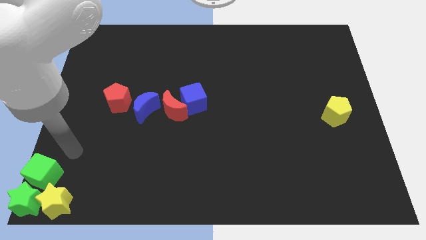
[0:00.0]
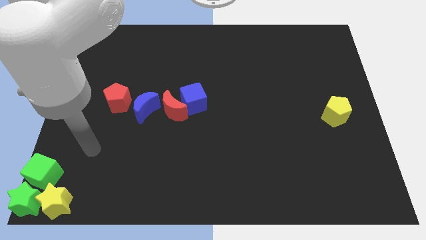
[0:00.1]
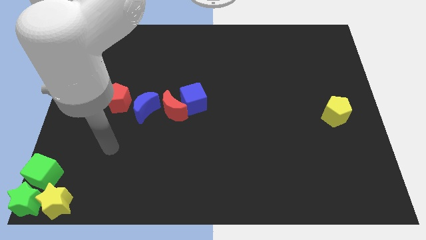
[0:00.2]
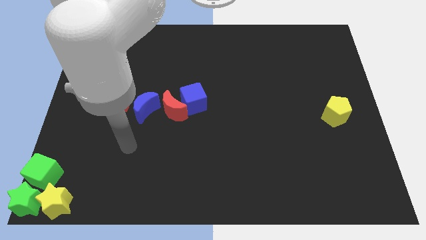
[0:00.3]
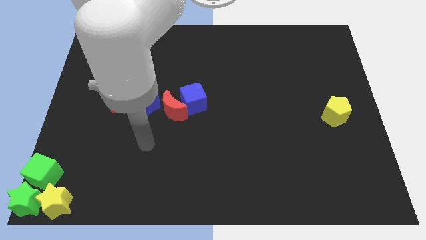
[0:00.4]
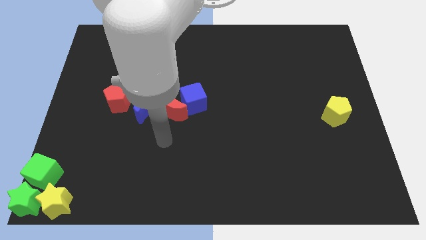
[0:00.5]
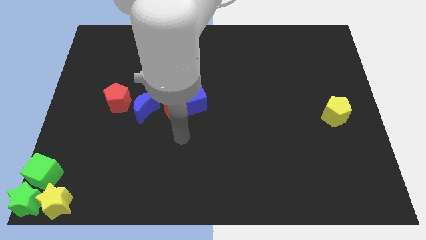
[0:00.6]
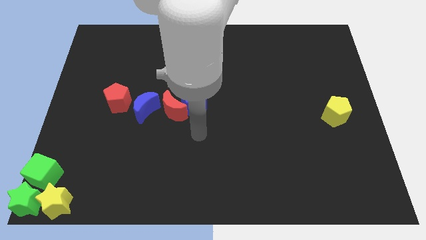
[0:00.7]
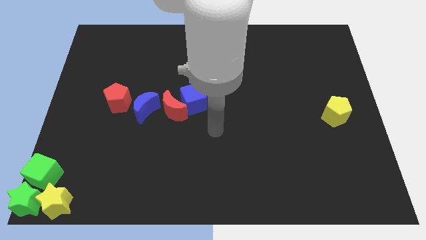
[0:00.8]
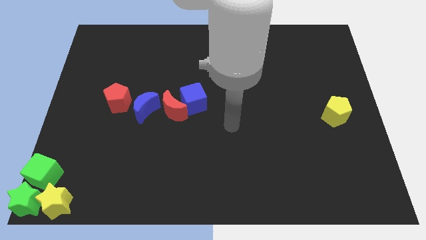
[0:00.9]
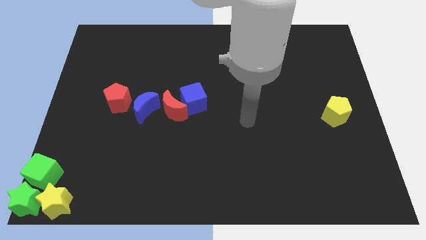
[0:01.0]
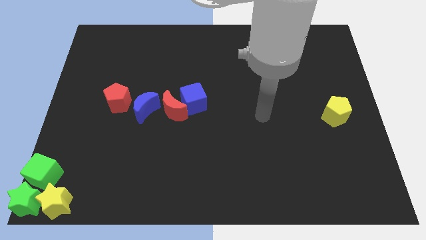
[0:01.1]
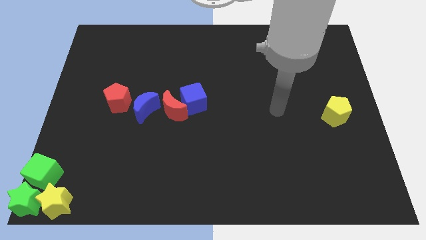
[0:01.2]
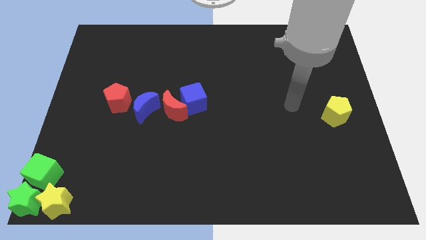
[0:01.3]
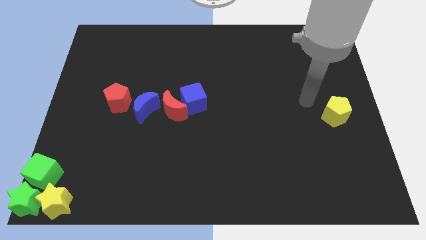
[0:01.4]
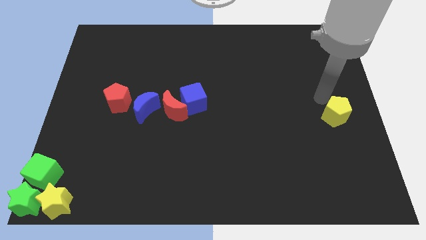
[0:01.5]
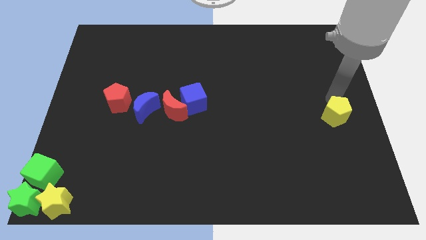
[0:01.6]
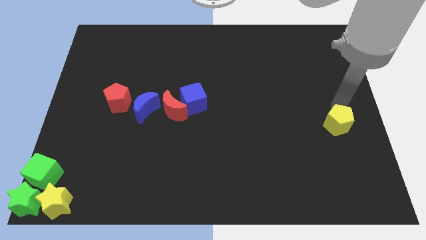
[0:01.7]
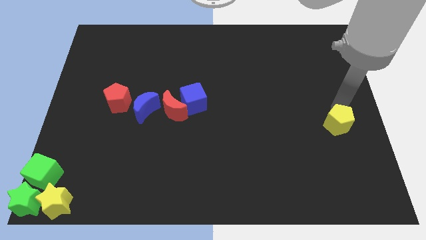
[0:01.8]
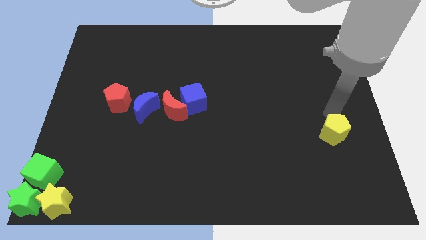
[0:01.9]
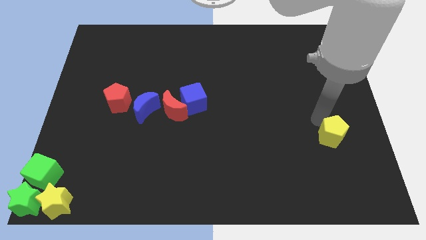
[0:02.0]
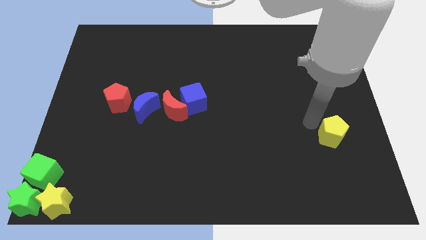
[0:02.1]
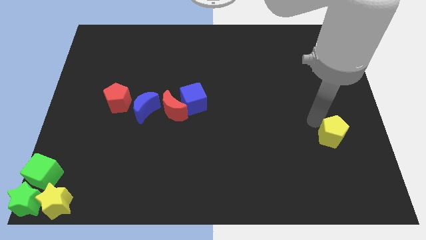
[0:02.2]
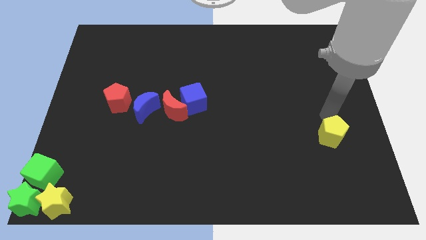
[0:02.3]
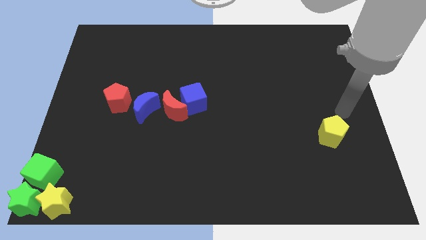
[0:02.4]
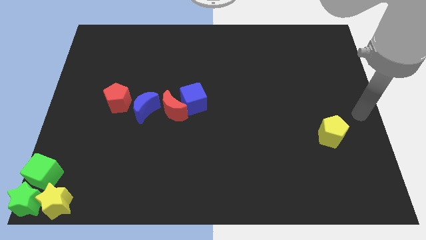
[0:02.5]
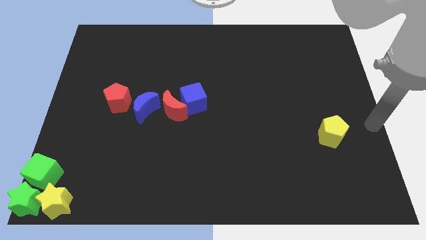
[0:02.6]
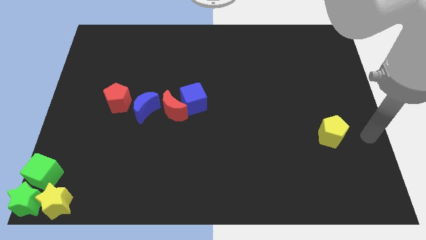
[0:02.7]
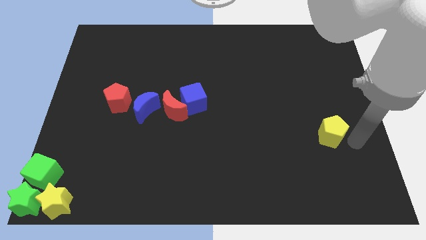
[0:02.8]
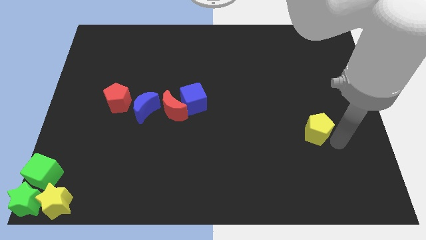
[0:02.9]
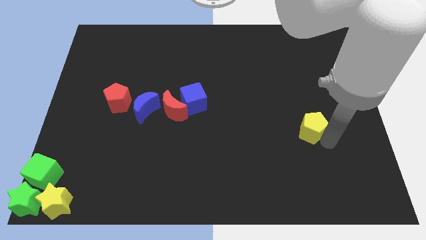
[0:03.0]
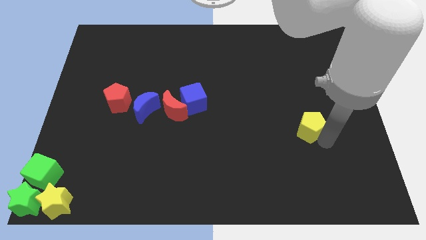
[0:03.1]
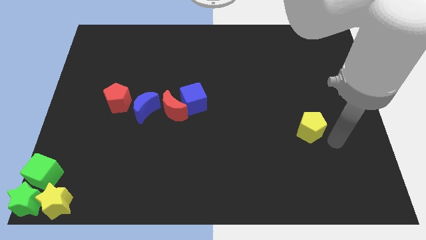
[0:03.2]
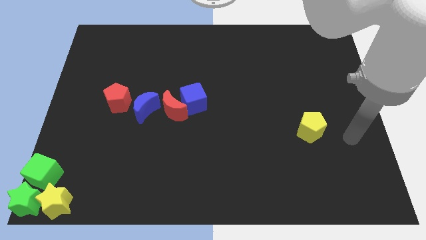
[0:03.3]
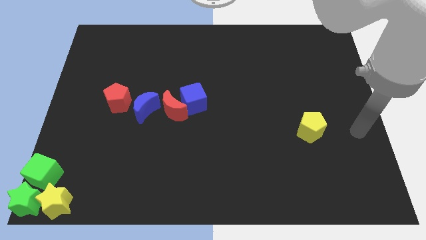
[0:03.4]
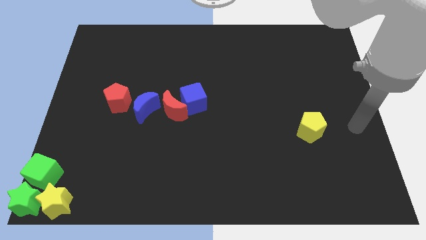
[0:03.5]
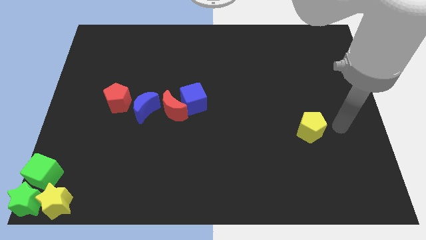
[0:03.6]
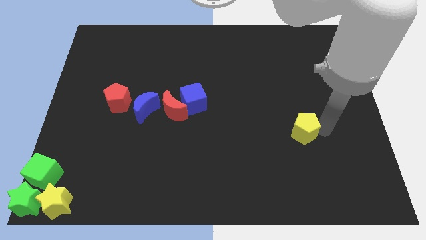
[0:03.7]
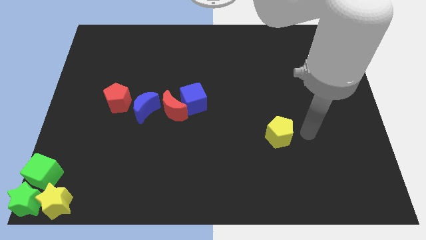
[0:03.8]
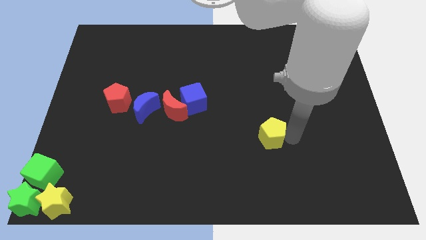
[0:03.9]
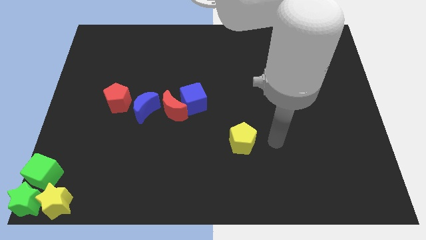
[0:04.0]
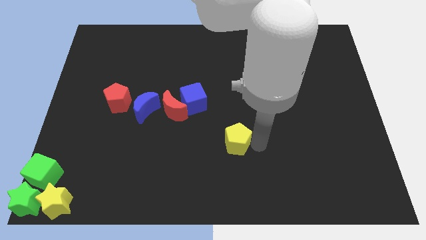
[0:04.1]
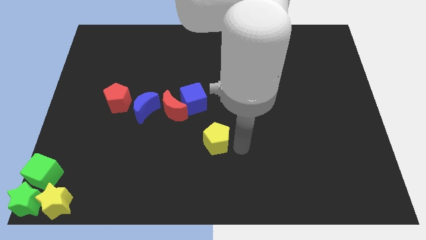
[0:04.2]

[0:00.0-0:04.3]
push the yellow pentagon to the left of the board

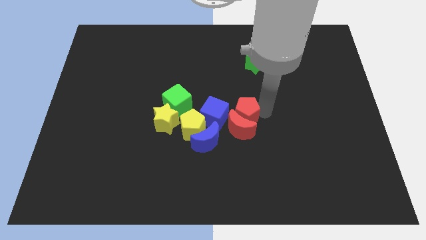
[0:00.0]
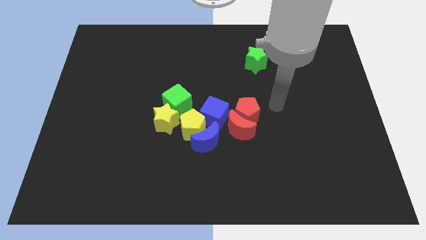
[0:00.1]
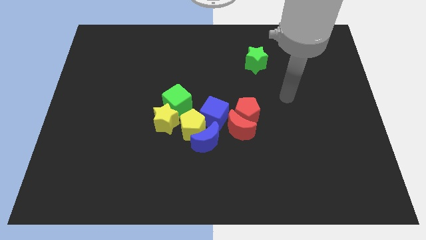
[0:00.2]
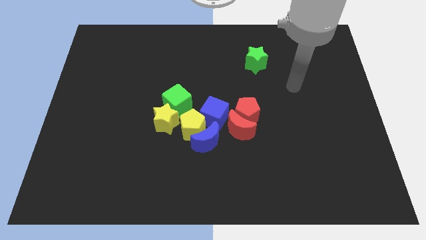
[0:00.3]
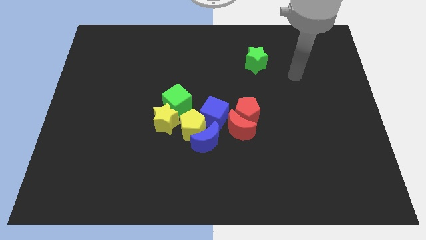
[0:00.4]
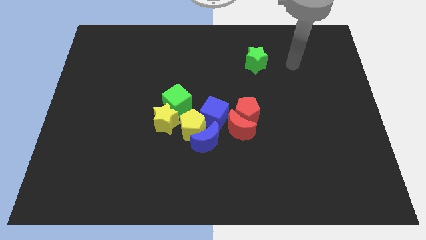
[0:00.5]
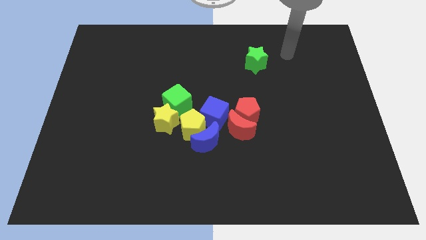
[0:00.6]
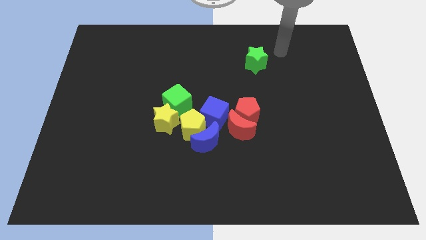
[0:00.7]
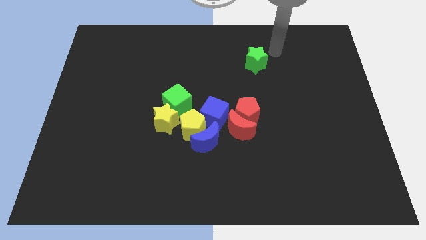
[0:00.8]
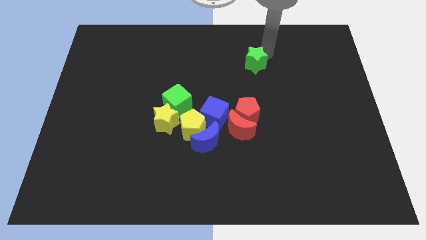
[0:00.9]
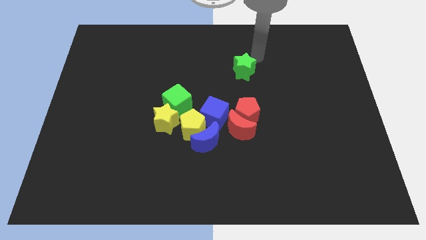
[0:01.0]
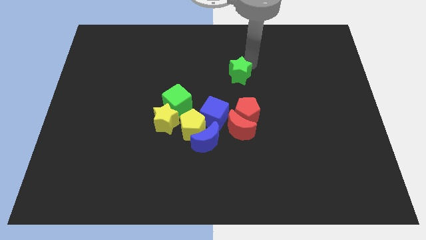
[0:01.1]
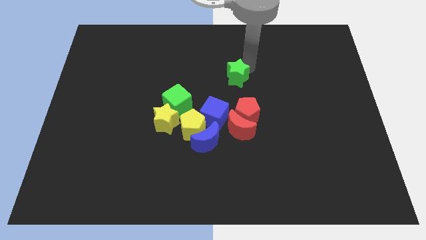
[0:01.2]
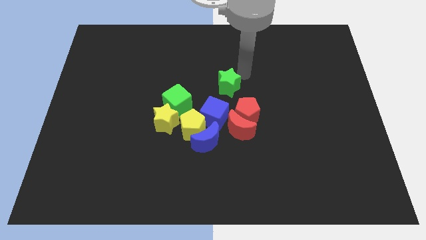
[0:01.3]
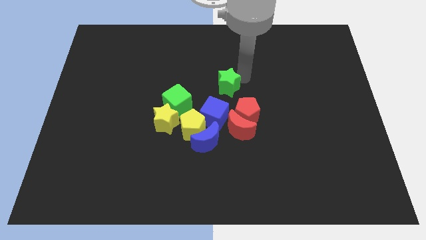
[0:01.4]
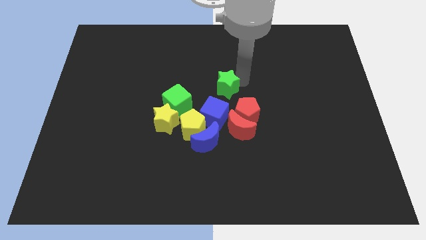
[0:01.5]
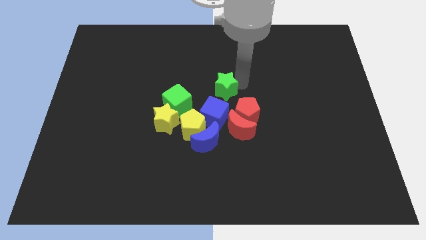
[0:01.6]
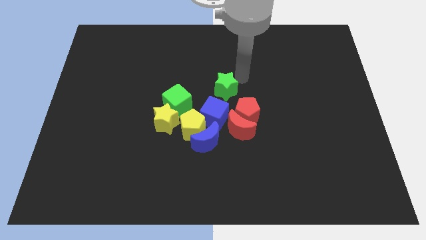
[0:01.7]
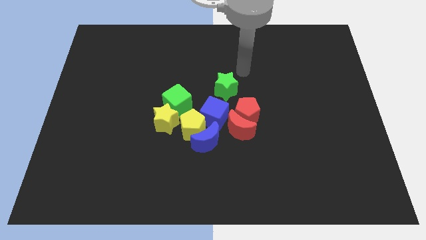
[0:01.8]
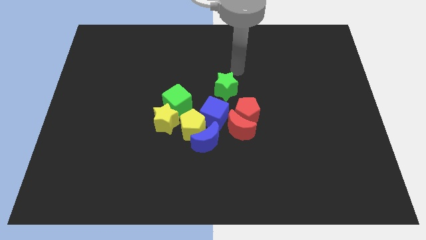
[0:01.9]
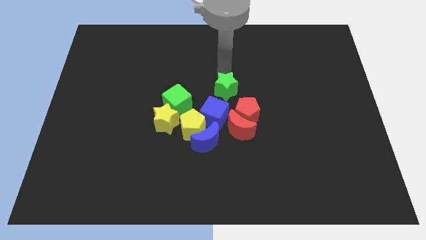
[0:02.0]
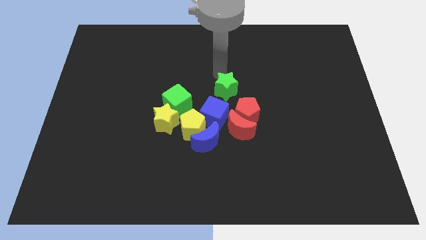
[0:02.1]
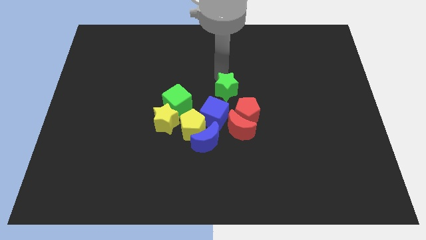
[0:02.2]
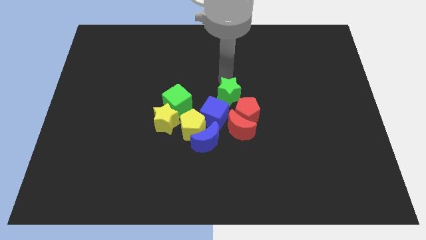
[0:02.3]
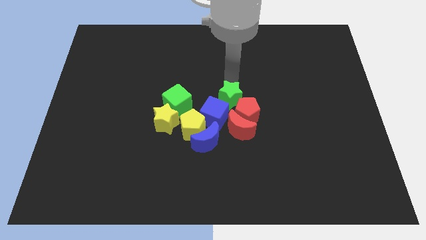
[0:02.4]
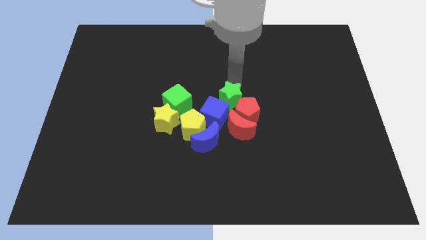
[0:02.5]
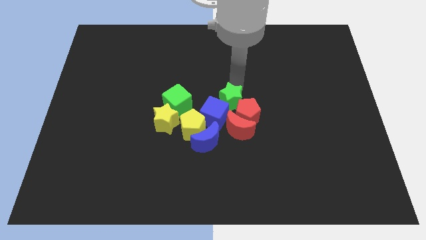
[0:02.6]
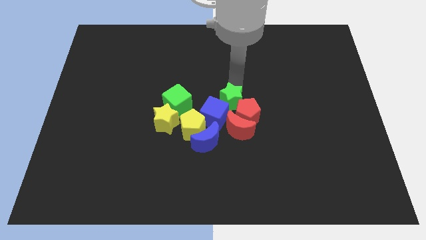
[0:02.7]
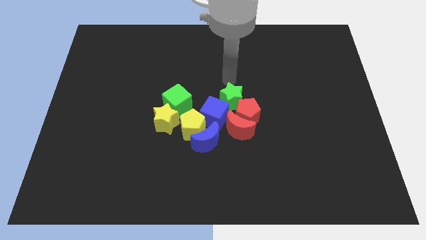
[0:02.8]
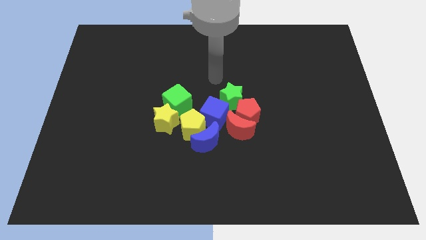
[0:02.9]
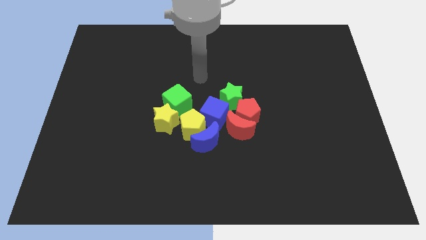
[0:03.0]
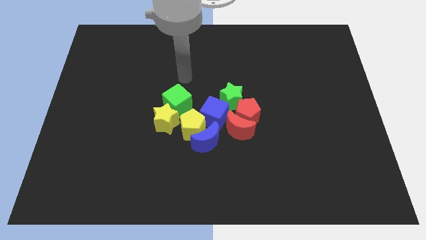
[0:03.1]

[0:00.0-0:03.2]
move the green star into the blue cube

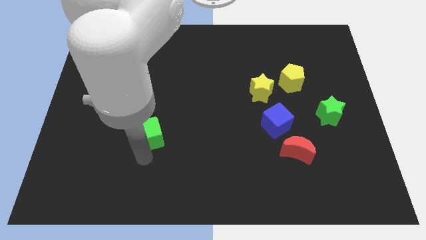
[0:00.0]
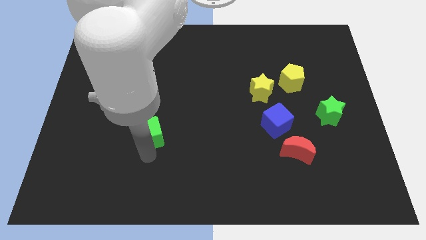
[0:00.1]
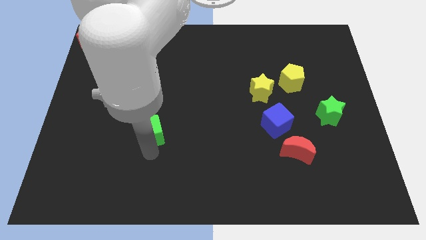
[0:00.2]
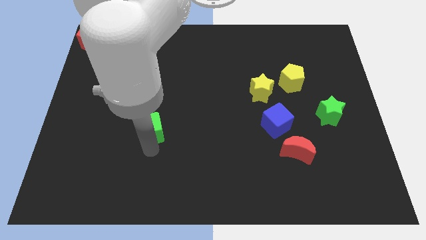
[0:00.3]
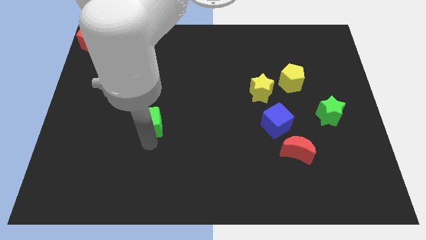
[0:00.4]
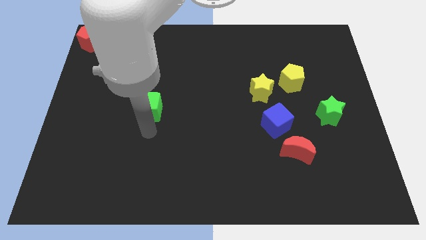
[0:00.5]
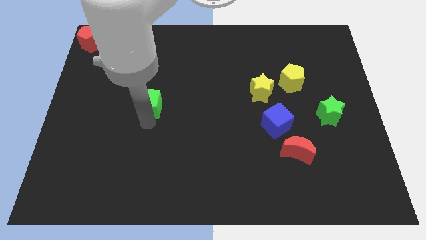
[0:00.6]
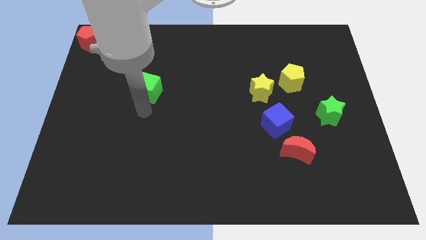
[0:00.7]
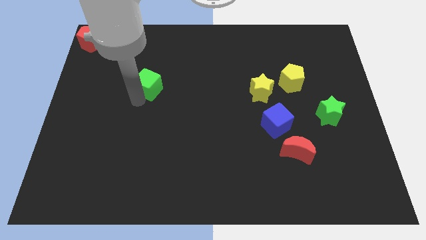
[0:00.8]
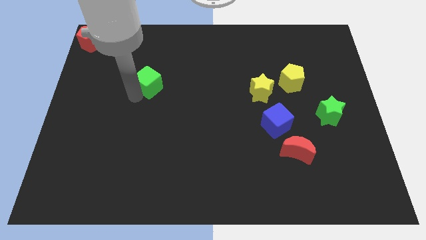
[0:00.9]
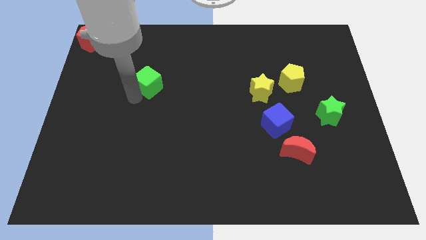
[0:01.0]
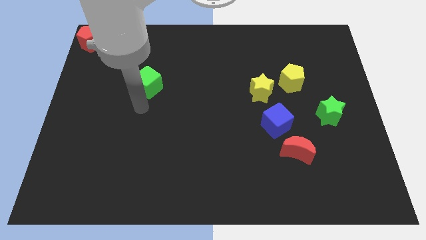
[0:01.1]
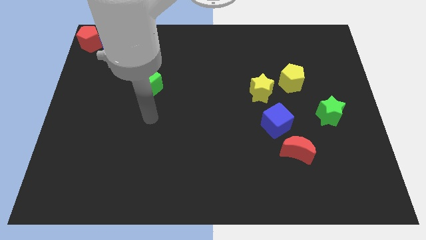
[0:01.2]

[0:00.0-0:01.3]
push the green cube towards the top

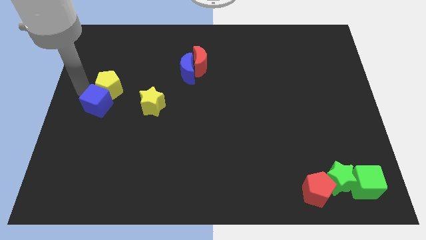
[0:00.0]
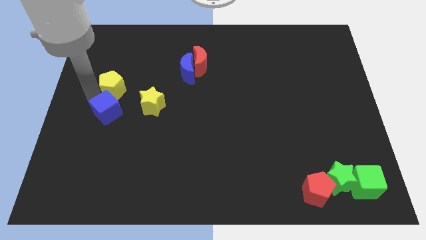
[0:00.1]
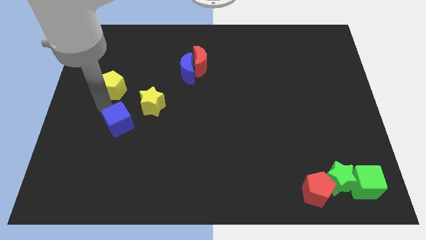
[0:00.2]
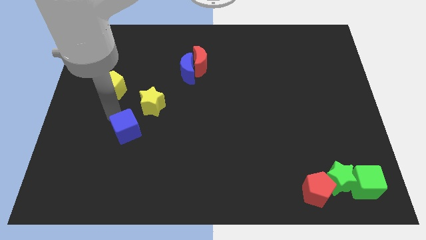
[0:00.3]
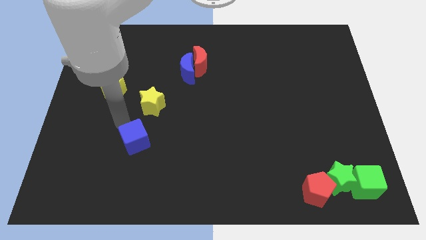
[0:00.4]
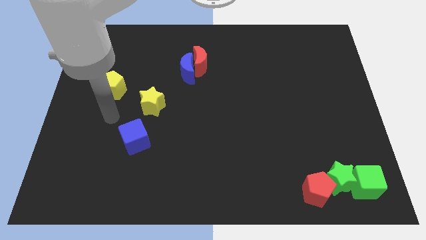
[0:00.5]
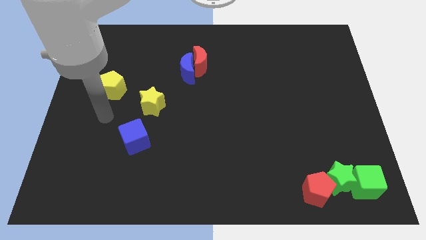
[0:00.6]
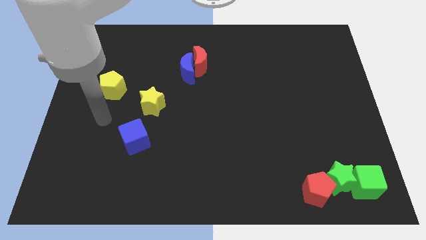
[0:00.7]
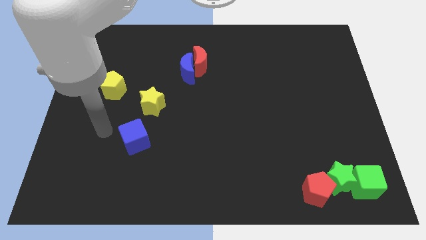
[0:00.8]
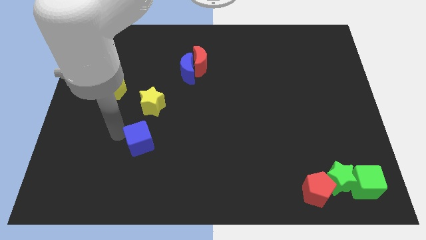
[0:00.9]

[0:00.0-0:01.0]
separate the blue cube and the yellow pentagon
